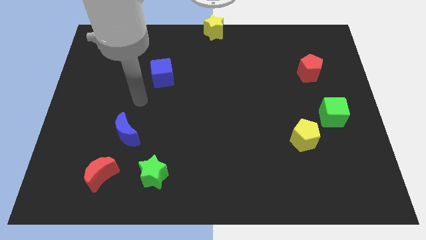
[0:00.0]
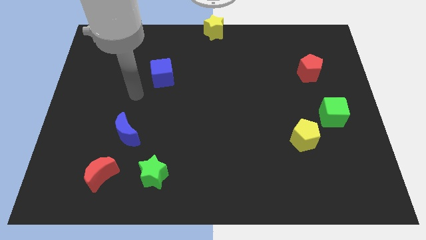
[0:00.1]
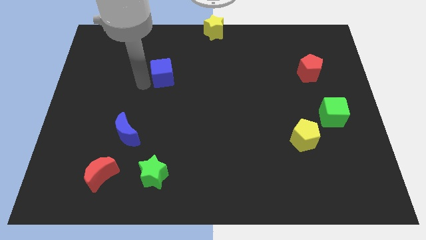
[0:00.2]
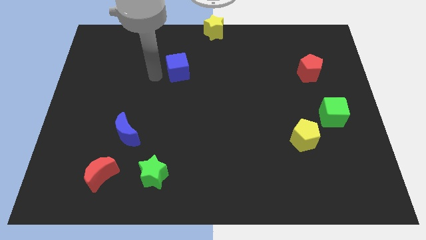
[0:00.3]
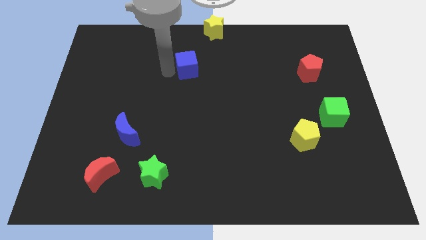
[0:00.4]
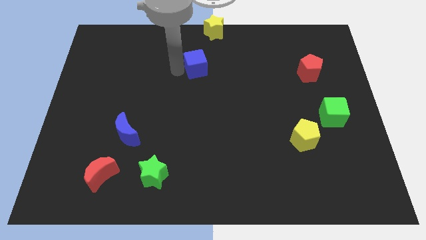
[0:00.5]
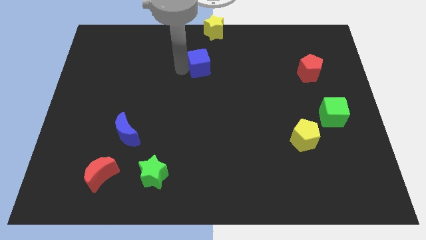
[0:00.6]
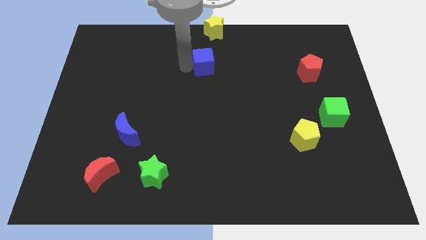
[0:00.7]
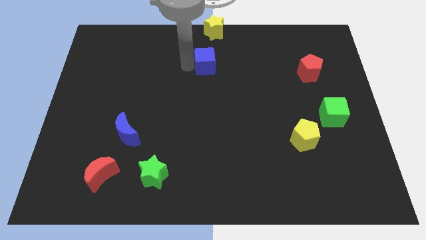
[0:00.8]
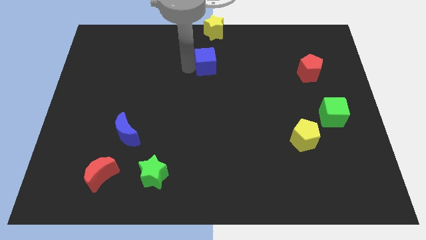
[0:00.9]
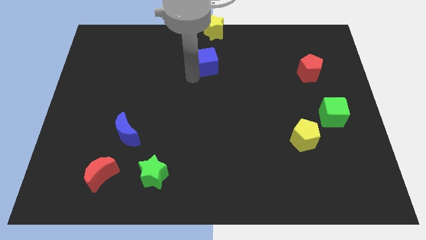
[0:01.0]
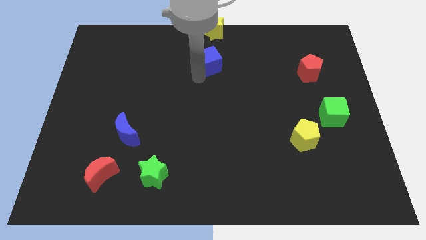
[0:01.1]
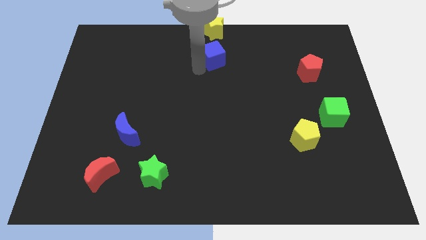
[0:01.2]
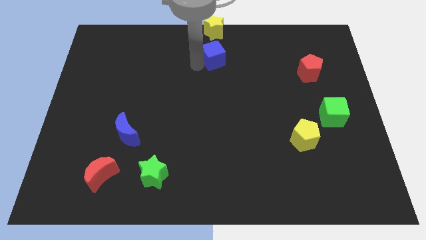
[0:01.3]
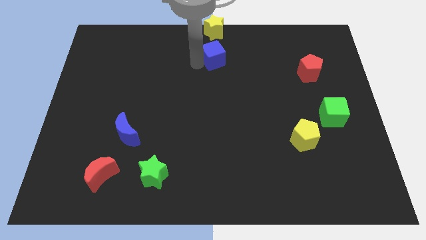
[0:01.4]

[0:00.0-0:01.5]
put the blue cube below the yellow star

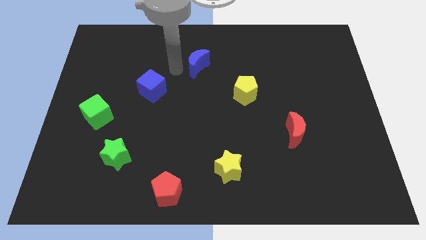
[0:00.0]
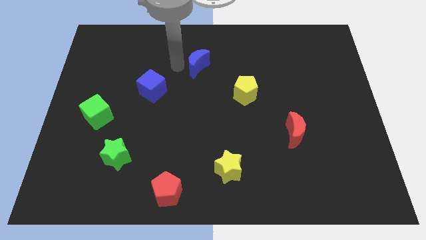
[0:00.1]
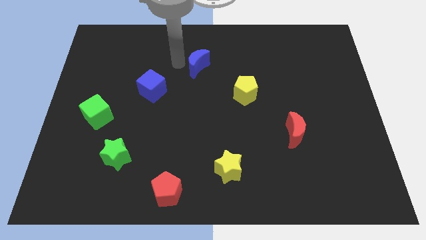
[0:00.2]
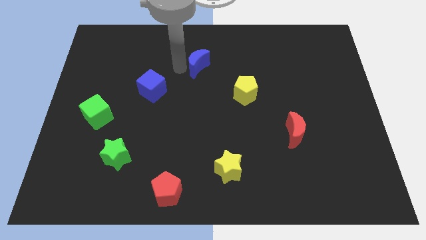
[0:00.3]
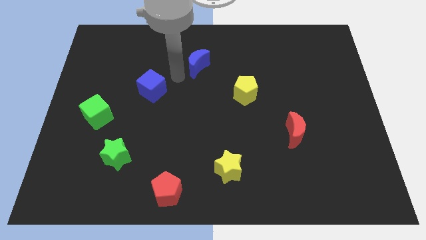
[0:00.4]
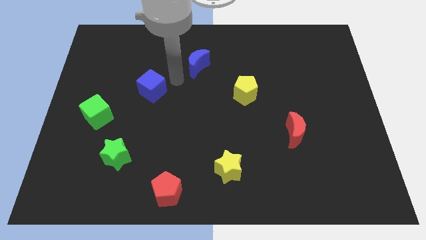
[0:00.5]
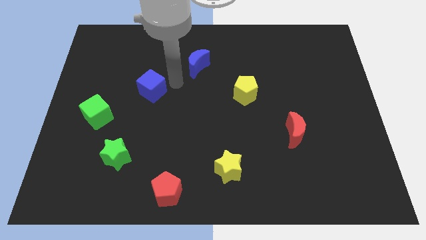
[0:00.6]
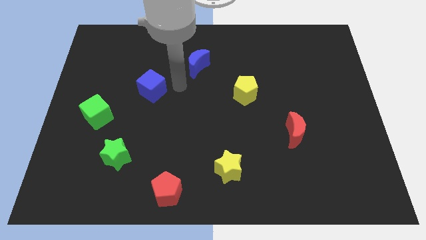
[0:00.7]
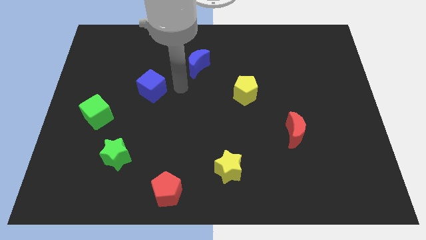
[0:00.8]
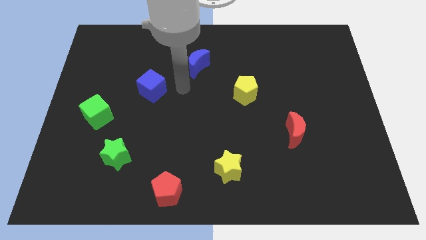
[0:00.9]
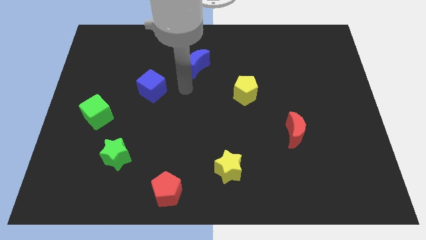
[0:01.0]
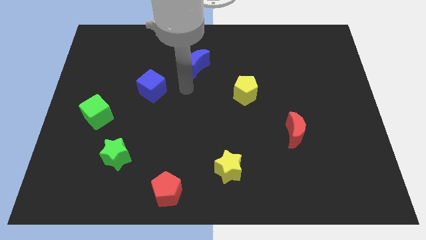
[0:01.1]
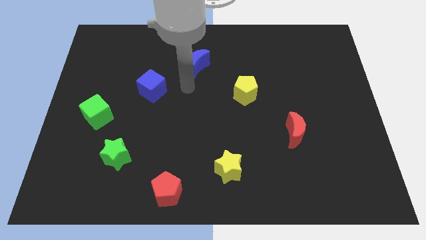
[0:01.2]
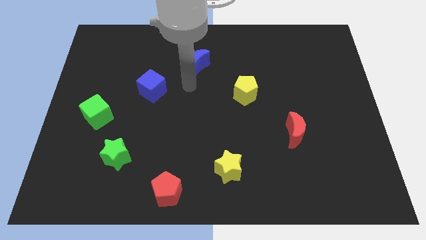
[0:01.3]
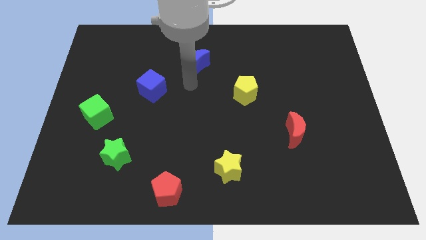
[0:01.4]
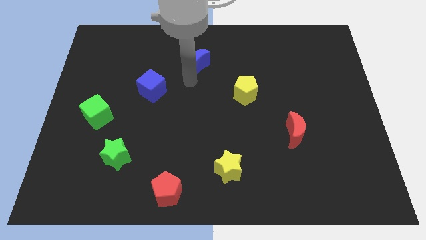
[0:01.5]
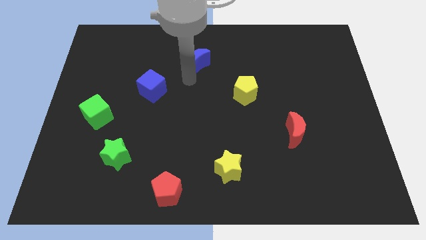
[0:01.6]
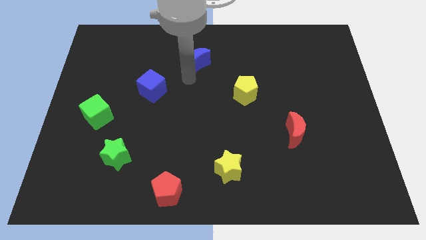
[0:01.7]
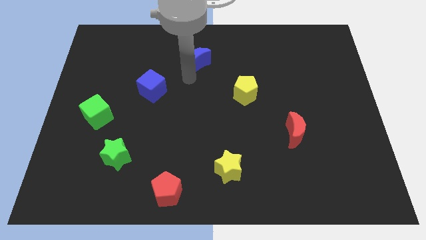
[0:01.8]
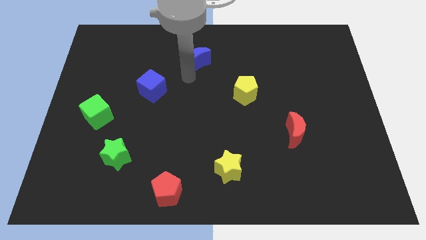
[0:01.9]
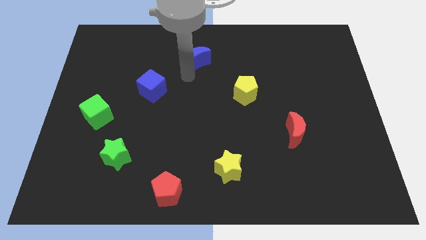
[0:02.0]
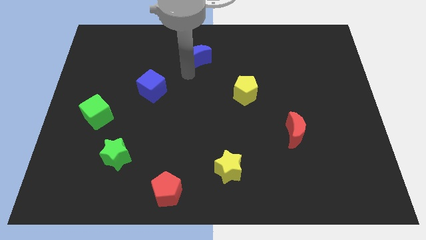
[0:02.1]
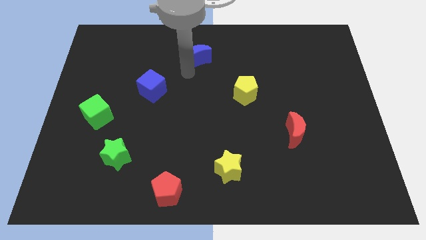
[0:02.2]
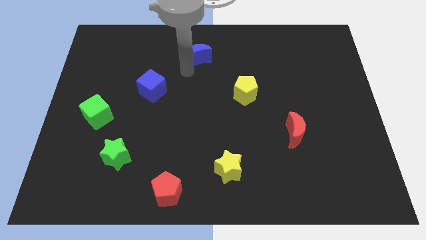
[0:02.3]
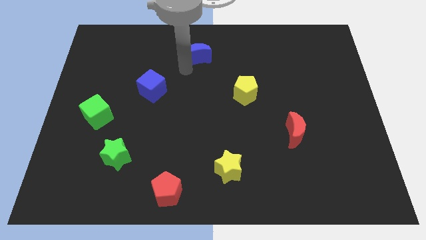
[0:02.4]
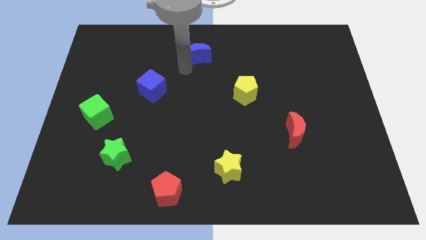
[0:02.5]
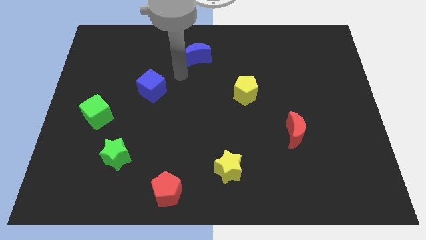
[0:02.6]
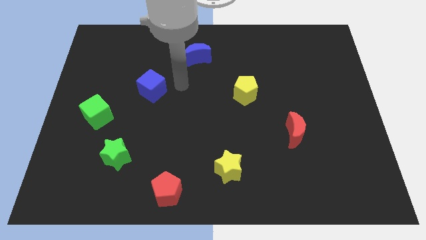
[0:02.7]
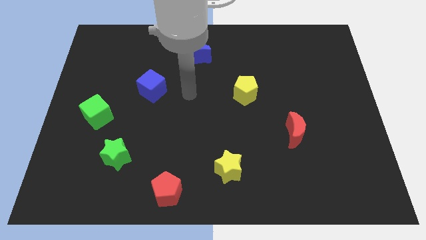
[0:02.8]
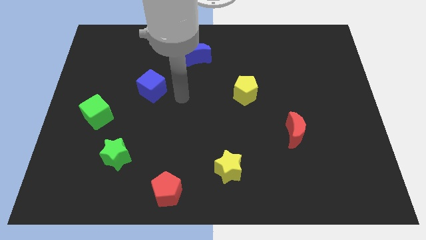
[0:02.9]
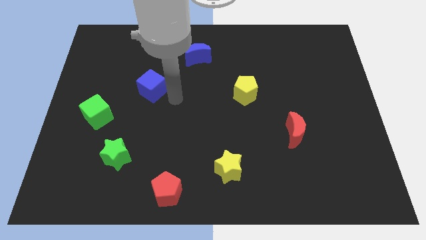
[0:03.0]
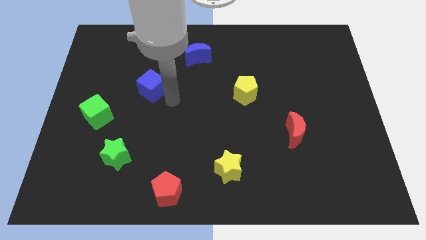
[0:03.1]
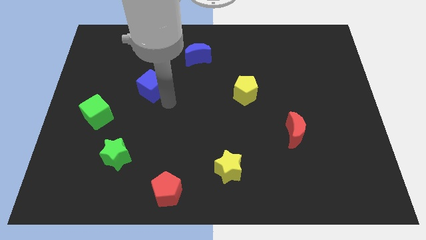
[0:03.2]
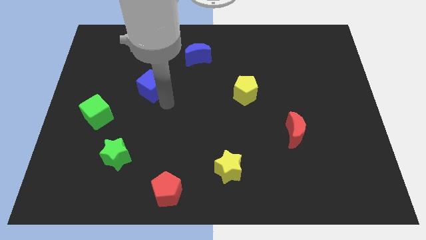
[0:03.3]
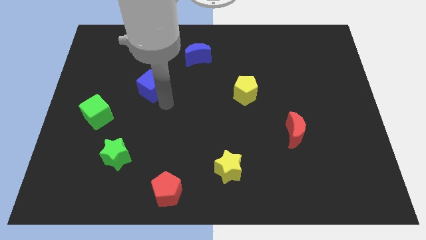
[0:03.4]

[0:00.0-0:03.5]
slightly push blue crescent towards the top center of the board

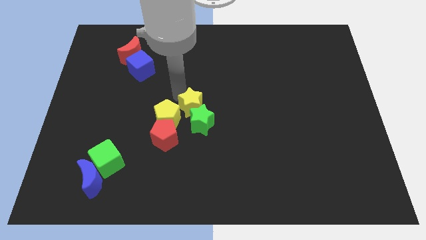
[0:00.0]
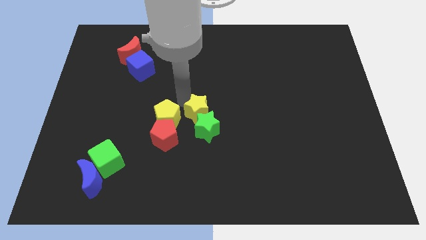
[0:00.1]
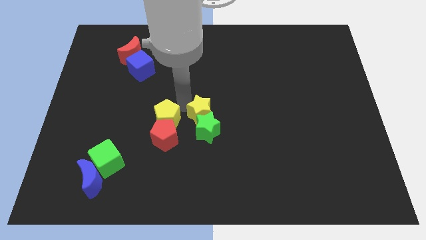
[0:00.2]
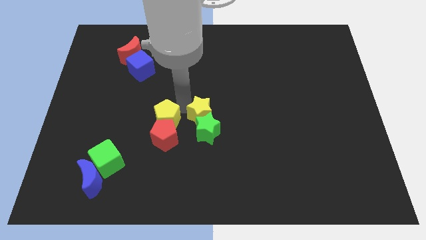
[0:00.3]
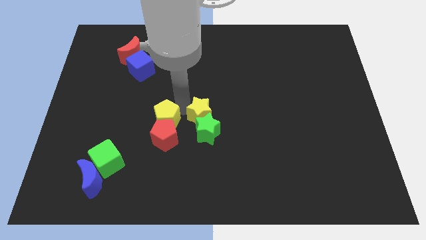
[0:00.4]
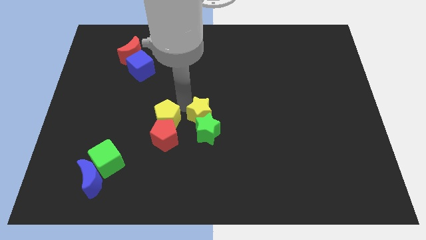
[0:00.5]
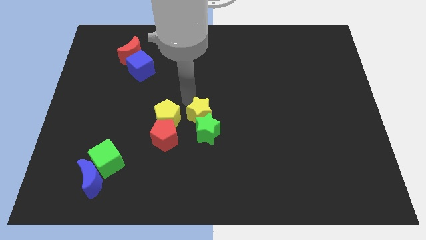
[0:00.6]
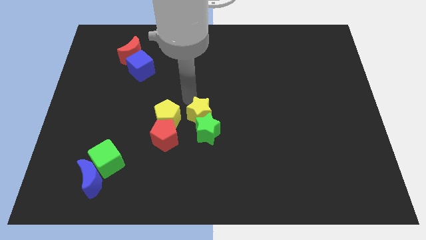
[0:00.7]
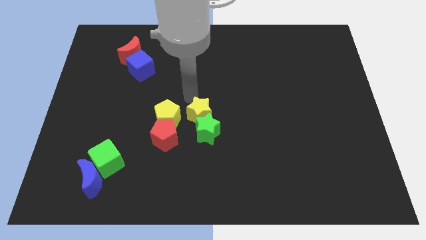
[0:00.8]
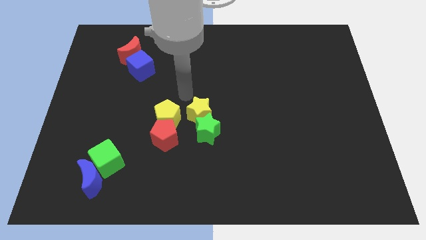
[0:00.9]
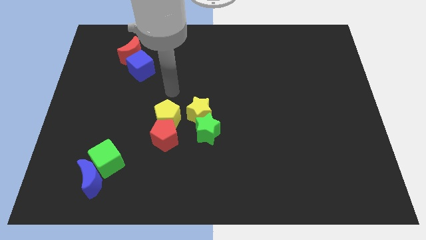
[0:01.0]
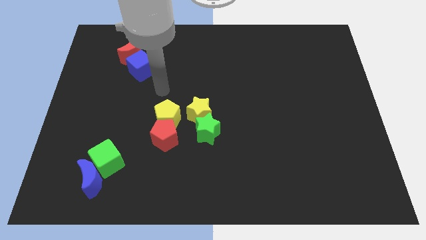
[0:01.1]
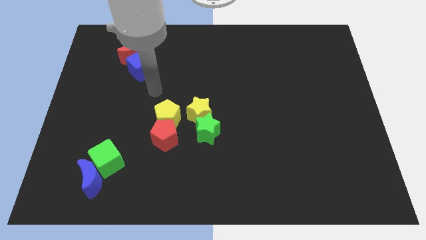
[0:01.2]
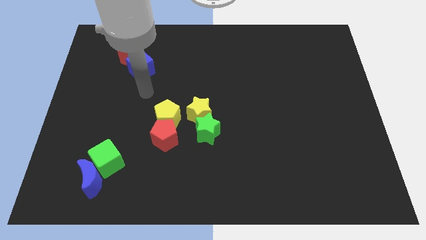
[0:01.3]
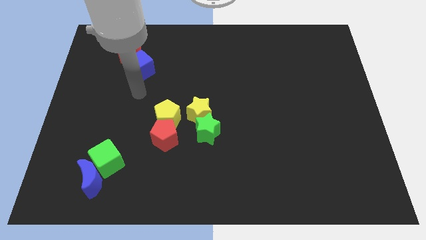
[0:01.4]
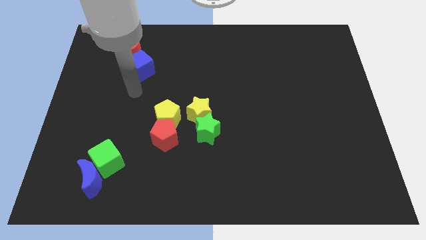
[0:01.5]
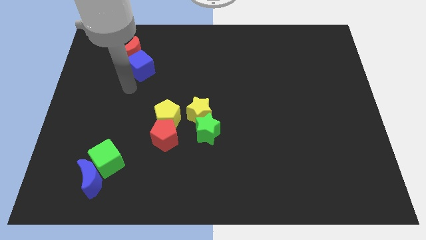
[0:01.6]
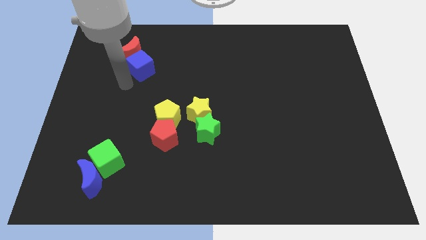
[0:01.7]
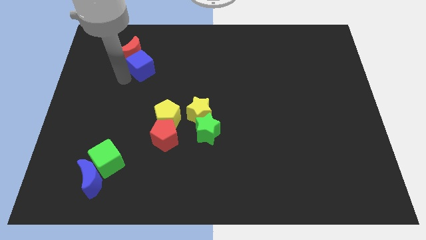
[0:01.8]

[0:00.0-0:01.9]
push the yellow star into the green star towards the center of the board

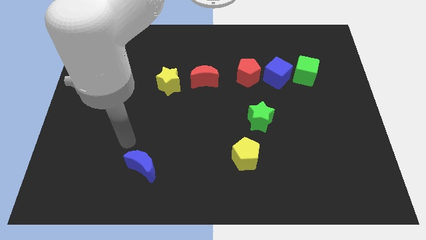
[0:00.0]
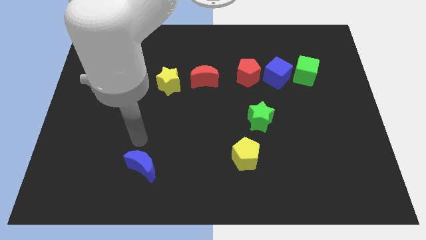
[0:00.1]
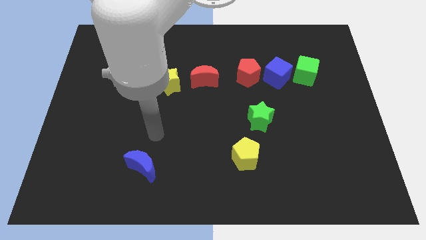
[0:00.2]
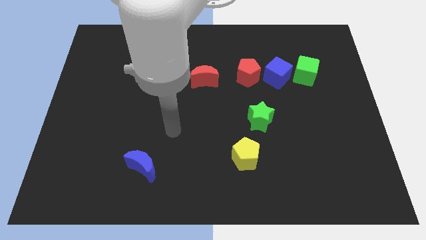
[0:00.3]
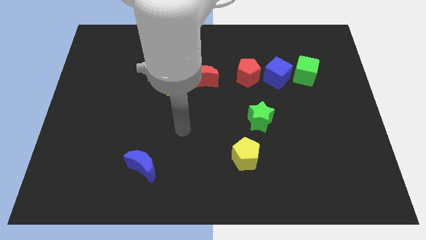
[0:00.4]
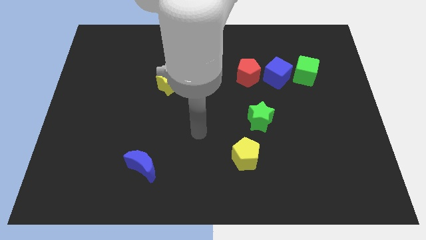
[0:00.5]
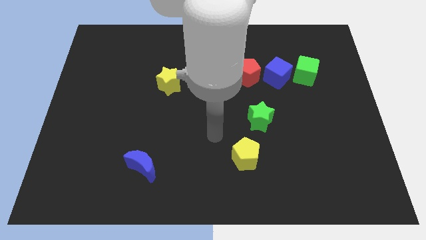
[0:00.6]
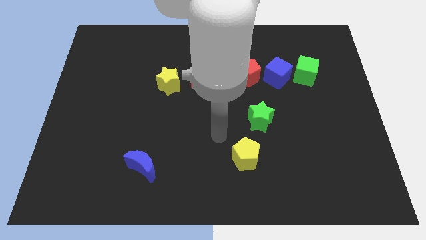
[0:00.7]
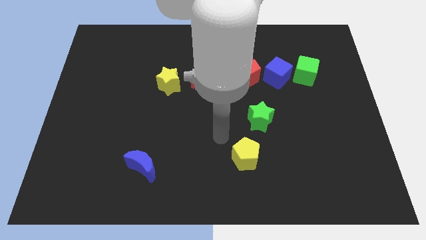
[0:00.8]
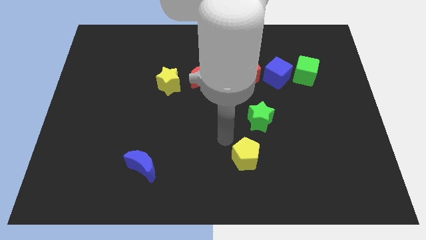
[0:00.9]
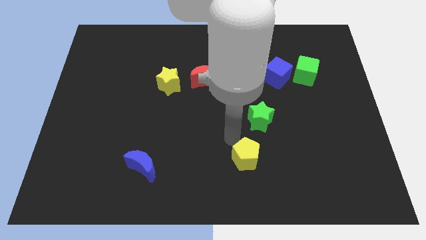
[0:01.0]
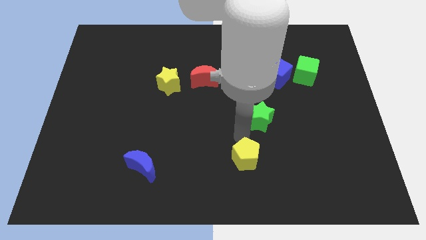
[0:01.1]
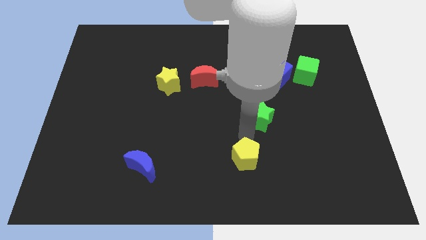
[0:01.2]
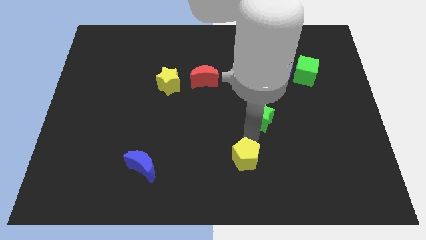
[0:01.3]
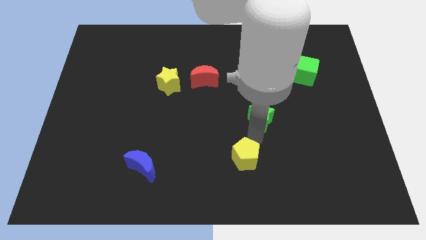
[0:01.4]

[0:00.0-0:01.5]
move your arm towards the top of the yellow pentagon

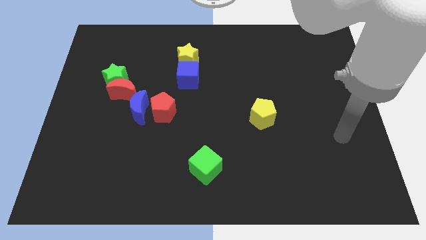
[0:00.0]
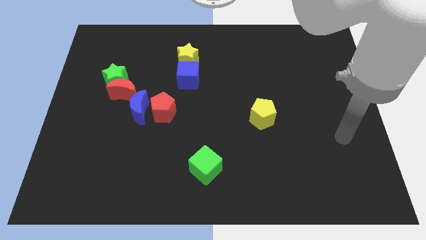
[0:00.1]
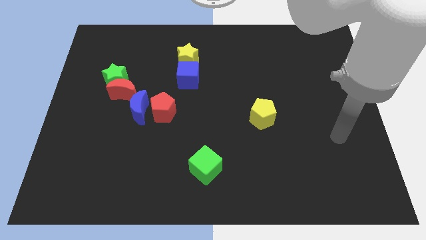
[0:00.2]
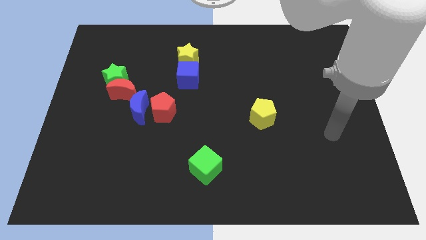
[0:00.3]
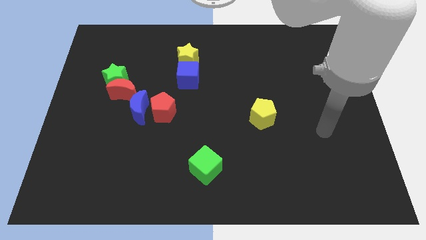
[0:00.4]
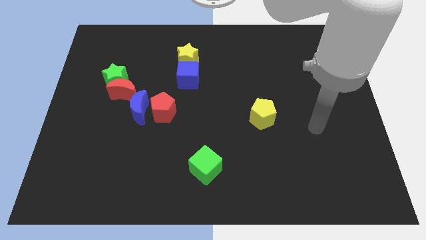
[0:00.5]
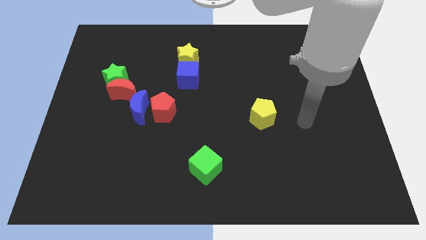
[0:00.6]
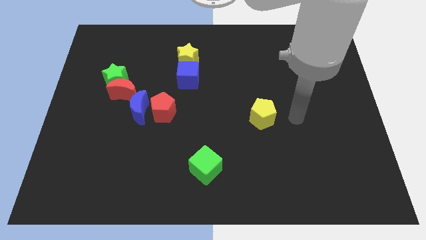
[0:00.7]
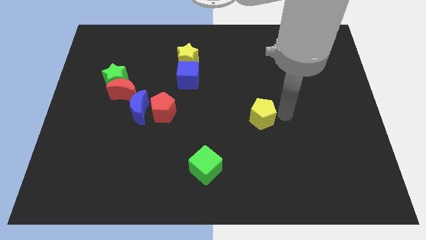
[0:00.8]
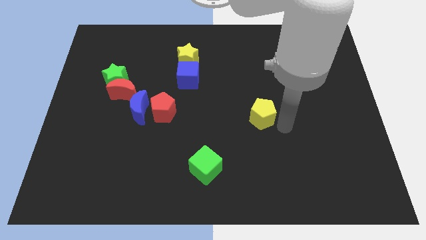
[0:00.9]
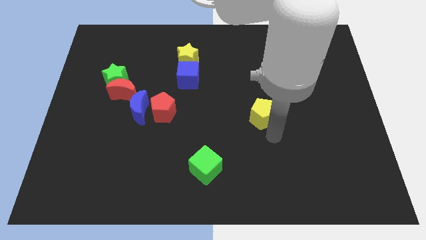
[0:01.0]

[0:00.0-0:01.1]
point your hand below the yellow pentagon
